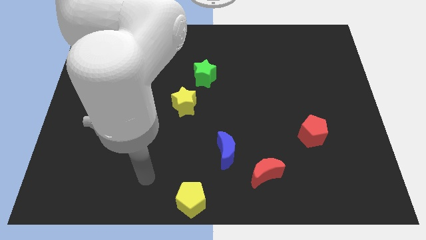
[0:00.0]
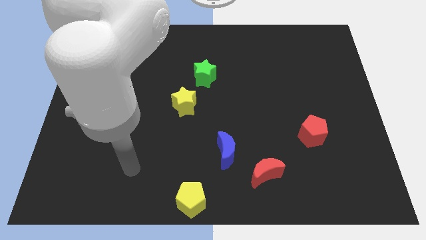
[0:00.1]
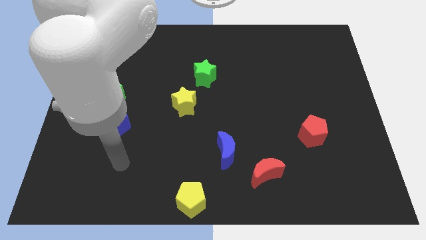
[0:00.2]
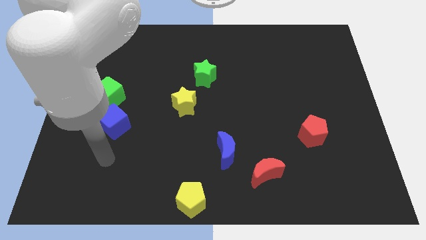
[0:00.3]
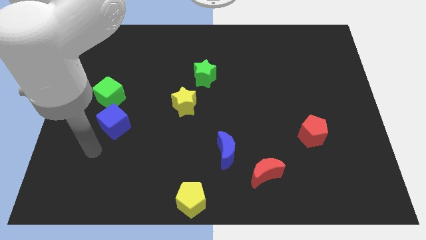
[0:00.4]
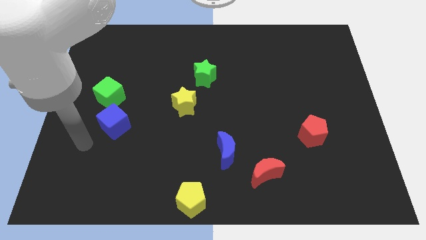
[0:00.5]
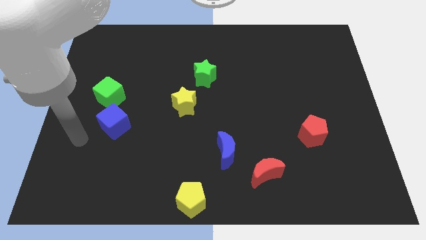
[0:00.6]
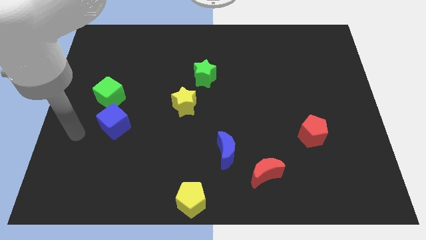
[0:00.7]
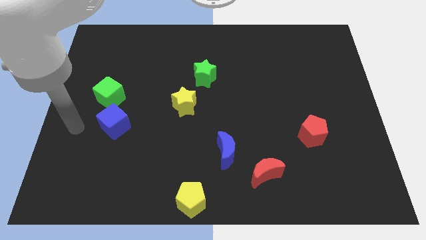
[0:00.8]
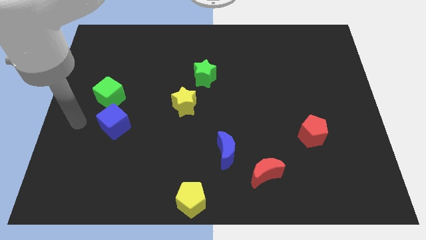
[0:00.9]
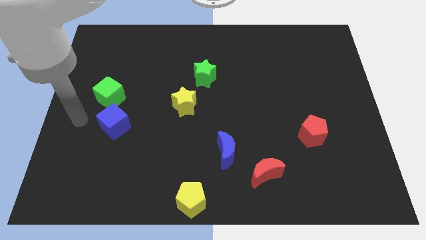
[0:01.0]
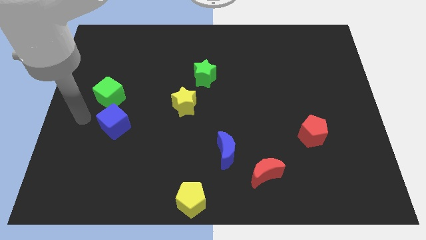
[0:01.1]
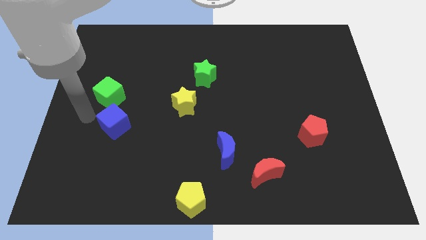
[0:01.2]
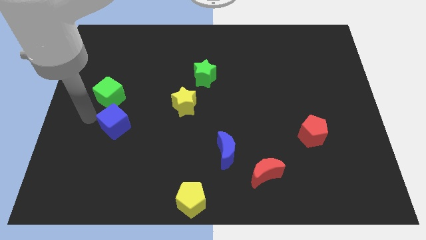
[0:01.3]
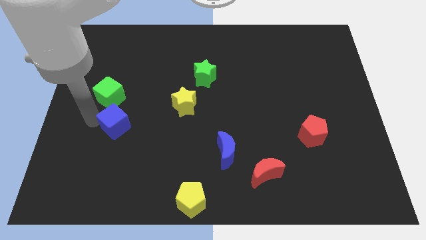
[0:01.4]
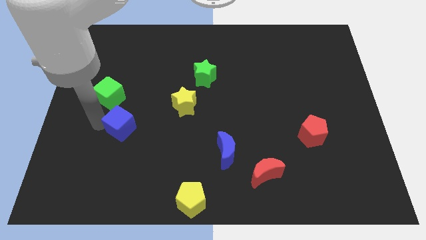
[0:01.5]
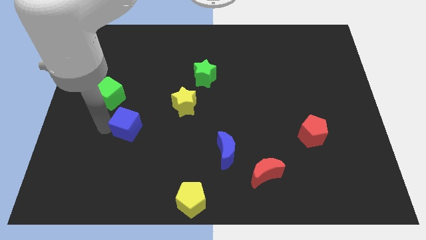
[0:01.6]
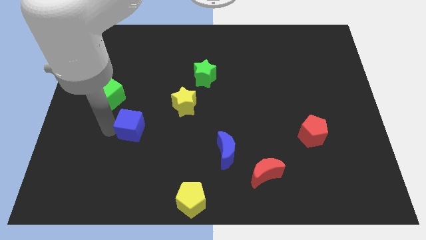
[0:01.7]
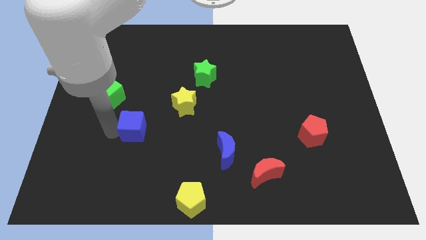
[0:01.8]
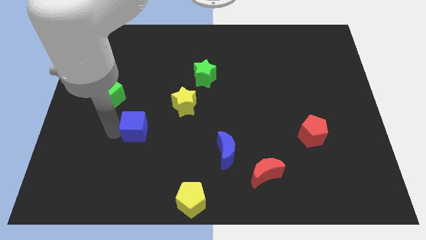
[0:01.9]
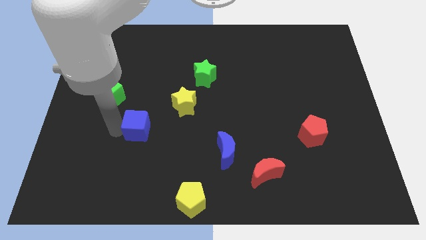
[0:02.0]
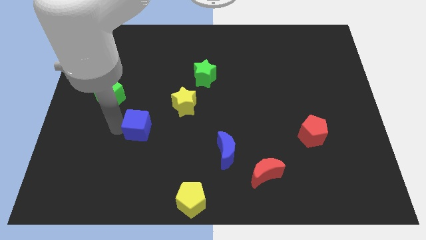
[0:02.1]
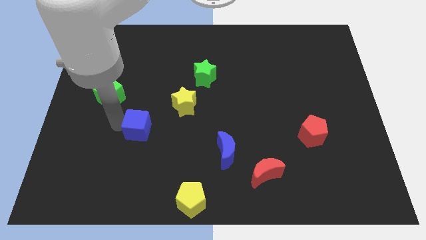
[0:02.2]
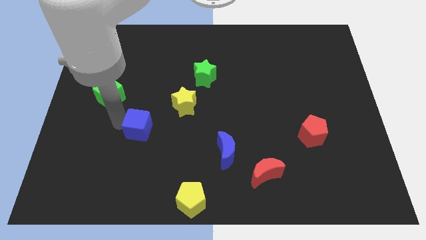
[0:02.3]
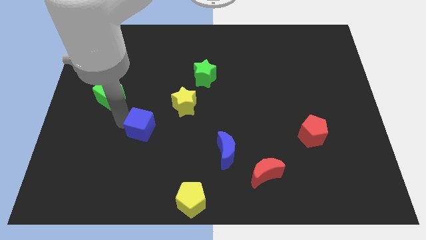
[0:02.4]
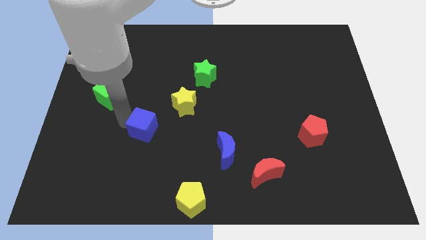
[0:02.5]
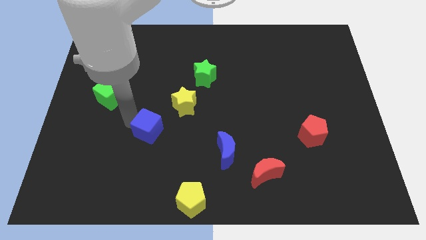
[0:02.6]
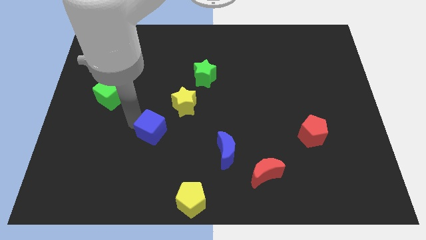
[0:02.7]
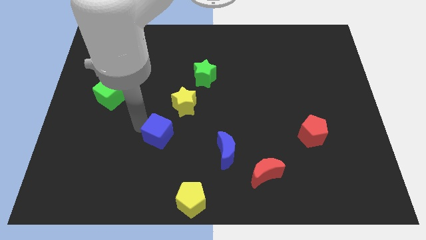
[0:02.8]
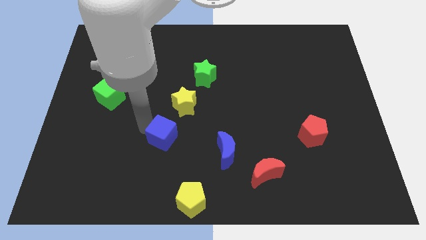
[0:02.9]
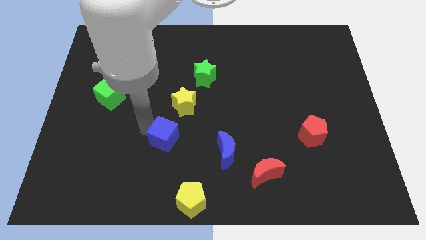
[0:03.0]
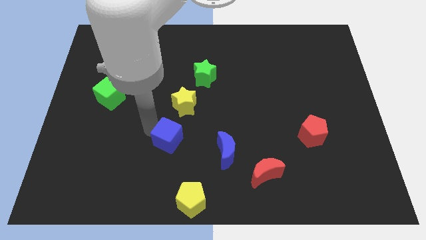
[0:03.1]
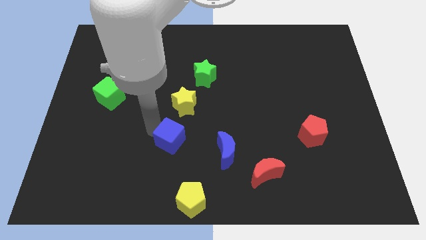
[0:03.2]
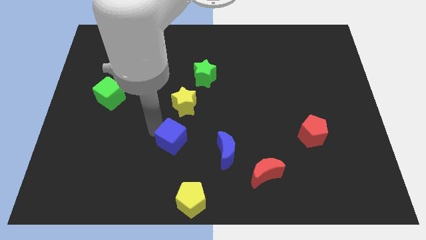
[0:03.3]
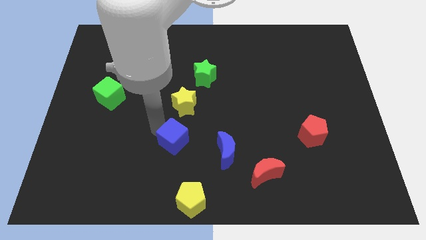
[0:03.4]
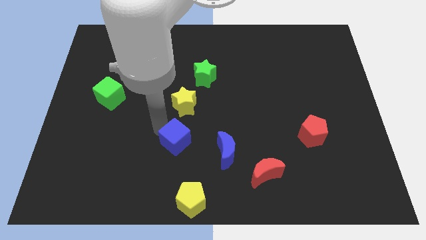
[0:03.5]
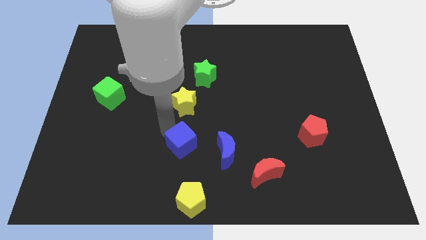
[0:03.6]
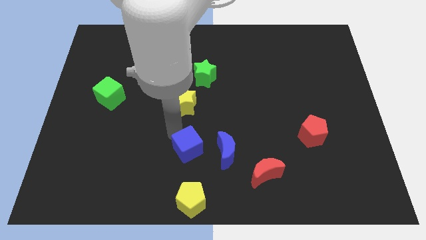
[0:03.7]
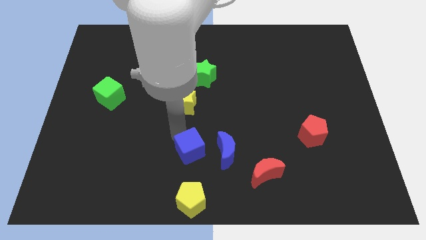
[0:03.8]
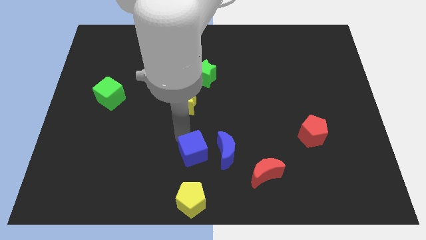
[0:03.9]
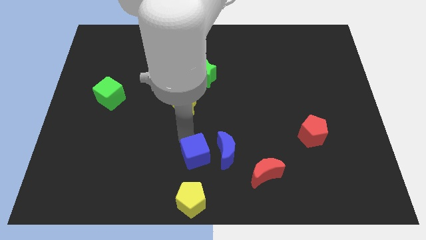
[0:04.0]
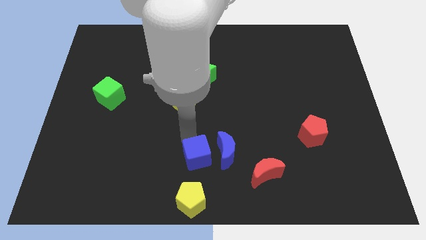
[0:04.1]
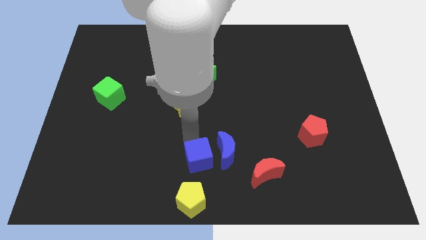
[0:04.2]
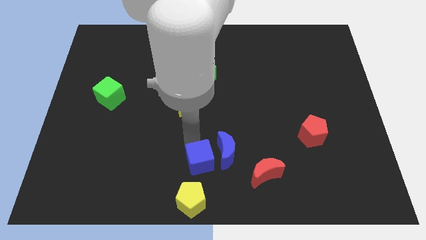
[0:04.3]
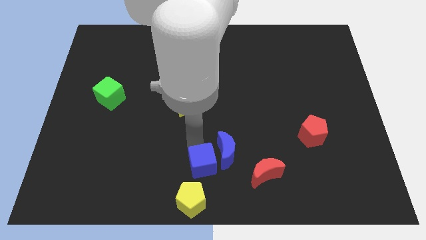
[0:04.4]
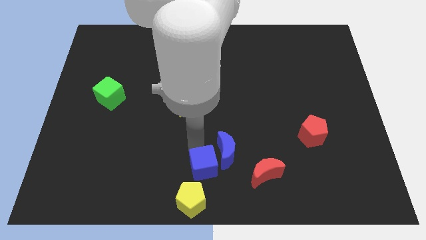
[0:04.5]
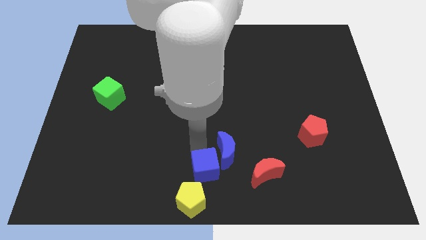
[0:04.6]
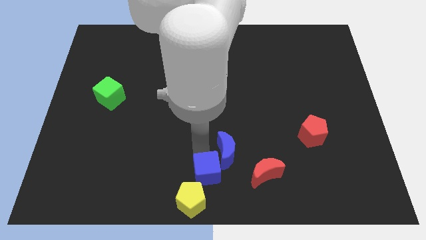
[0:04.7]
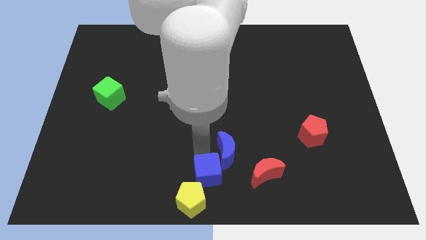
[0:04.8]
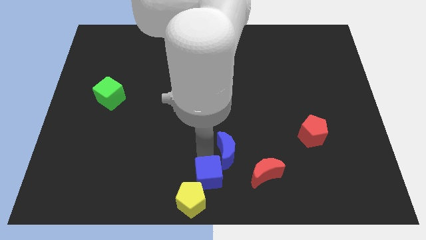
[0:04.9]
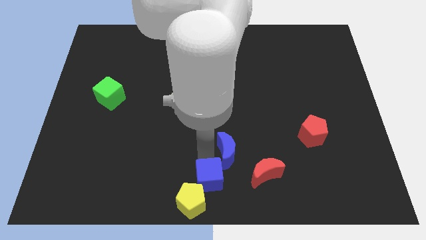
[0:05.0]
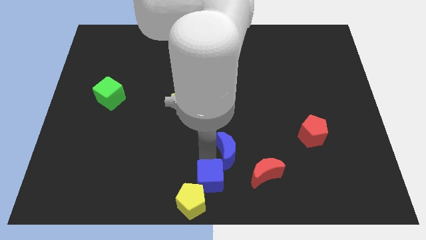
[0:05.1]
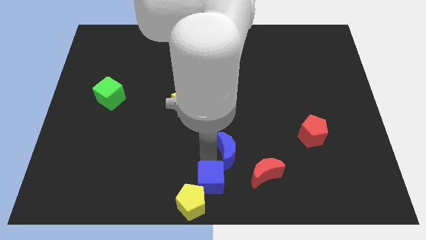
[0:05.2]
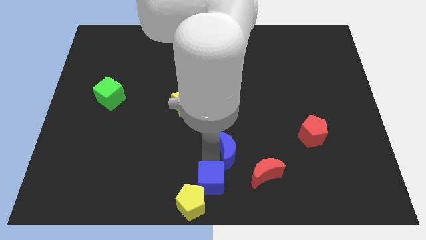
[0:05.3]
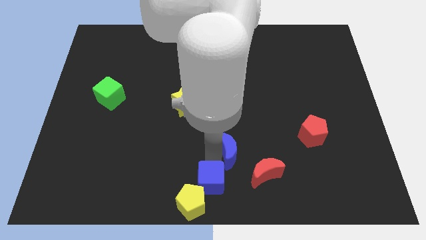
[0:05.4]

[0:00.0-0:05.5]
push the blue cube above the yellow pentagon

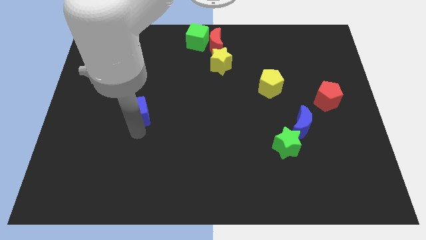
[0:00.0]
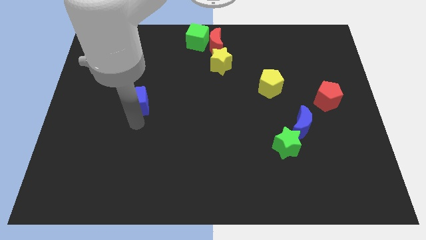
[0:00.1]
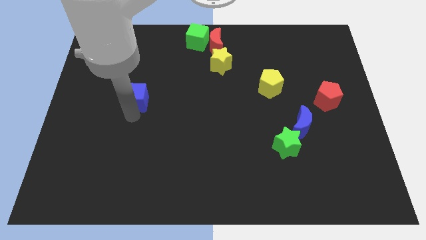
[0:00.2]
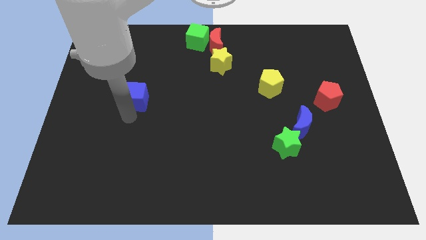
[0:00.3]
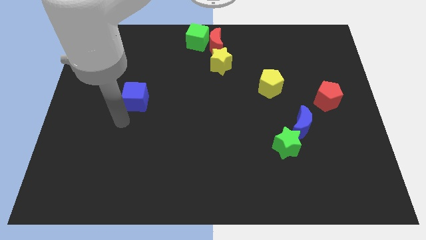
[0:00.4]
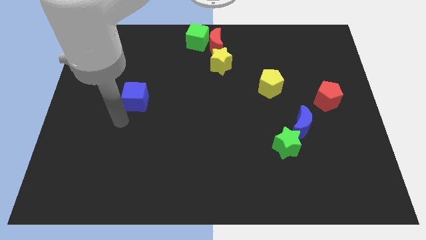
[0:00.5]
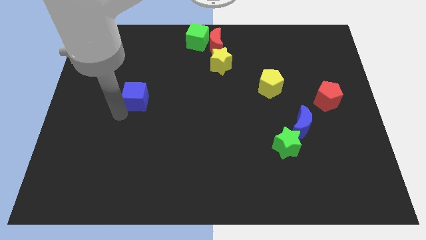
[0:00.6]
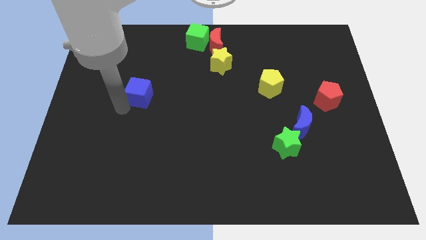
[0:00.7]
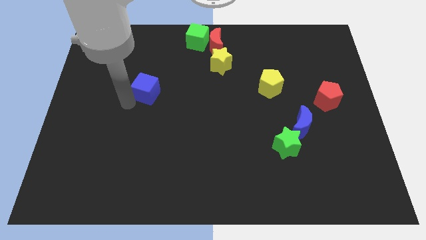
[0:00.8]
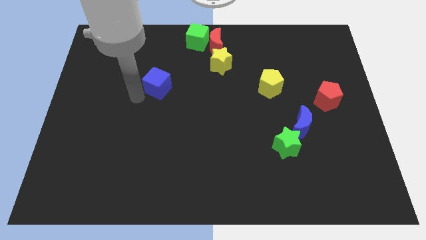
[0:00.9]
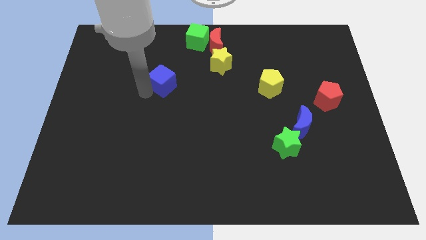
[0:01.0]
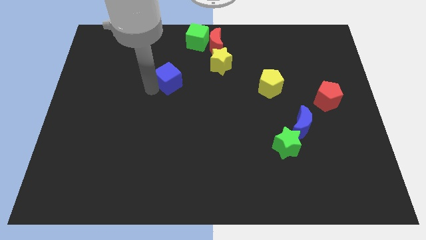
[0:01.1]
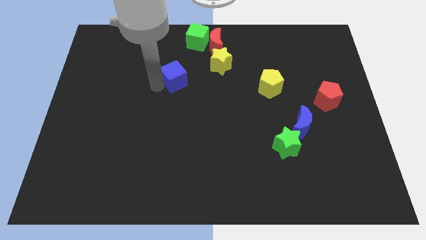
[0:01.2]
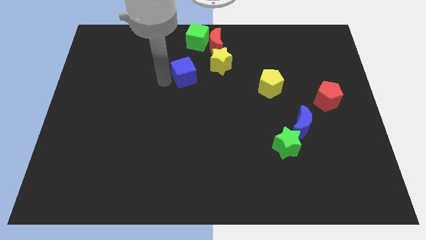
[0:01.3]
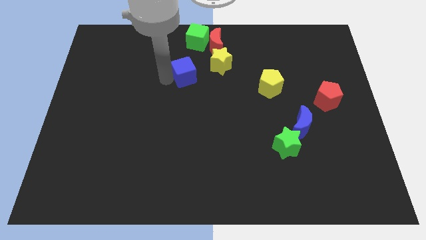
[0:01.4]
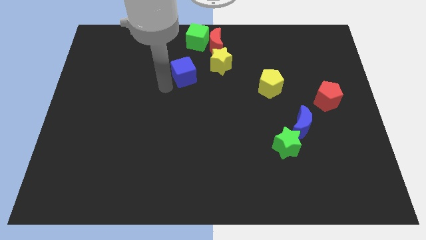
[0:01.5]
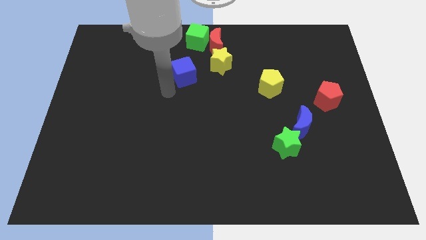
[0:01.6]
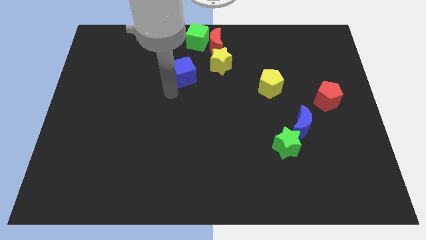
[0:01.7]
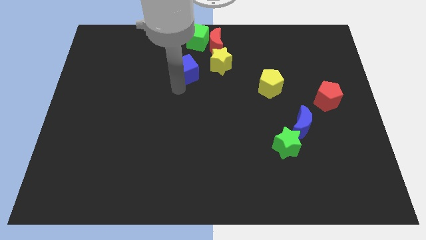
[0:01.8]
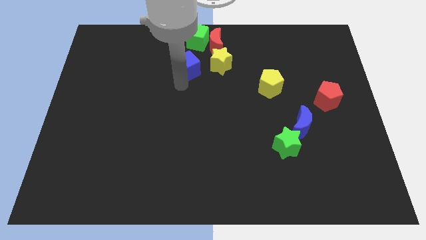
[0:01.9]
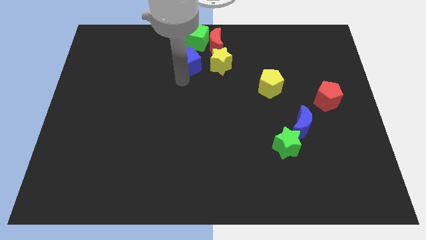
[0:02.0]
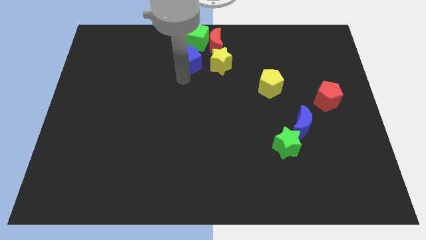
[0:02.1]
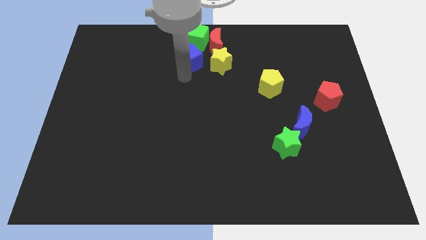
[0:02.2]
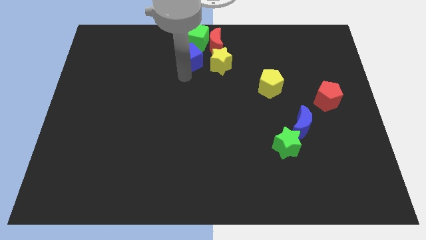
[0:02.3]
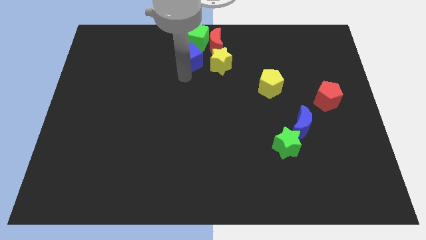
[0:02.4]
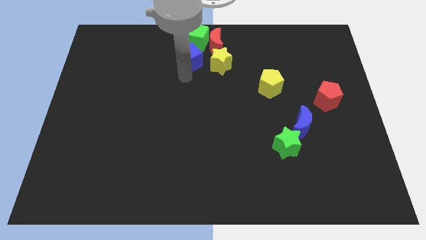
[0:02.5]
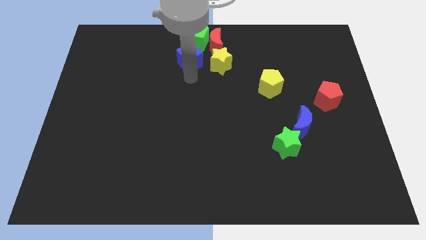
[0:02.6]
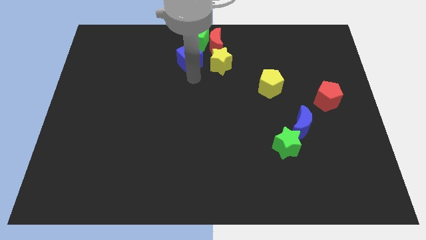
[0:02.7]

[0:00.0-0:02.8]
put the blue cube to the left side of yellow star

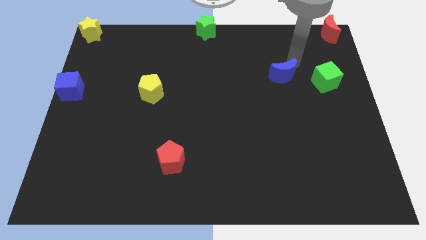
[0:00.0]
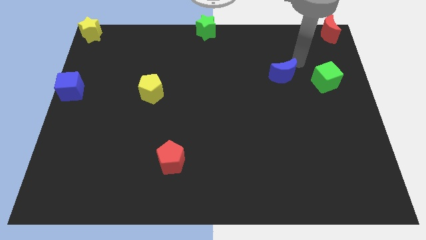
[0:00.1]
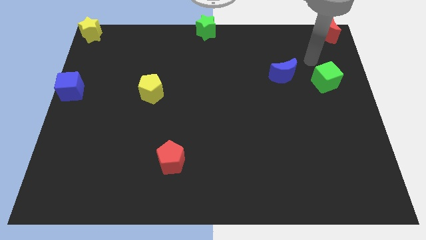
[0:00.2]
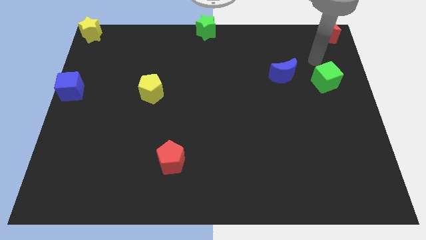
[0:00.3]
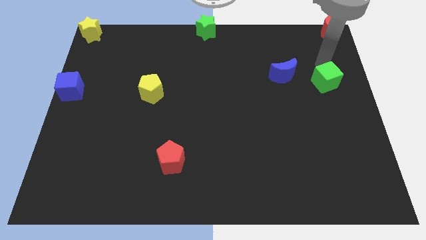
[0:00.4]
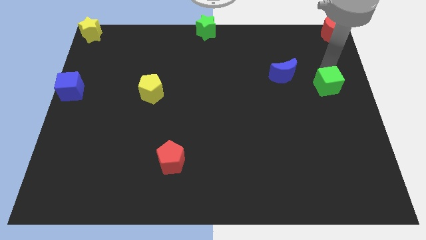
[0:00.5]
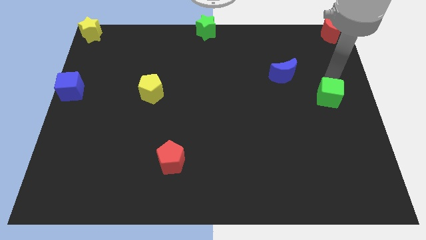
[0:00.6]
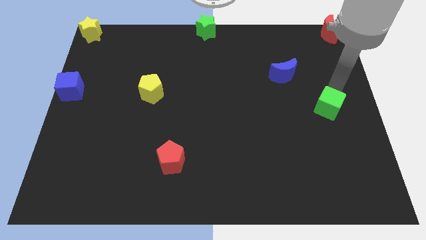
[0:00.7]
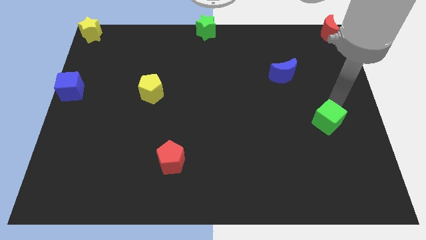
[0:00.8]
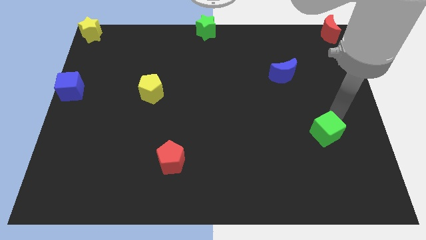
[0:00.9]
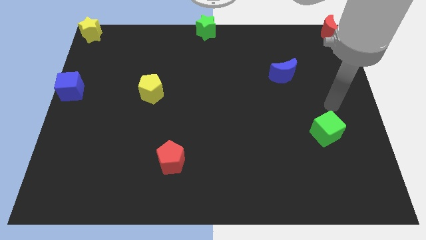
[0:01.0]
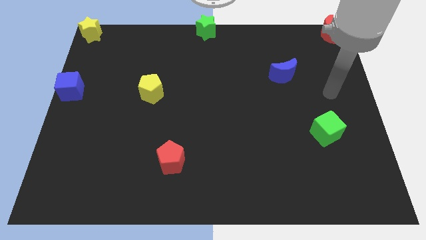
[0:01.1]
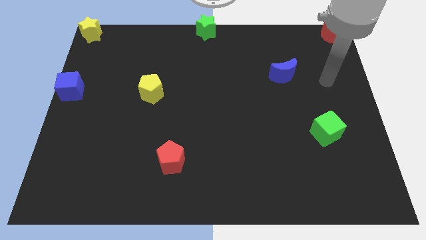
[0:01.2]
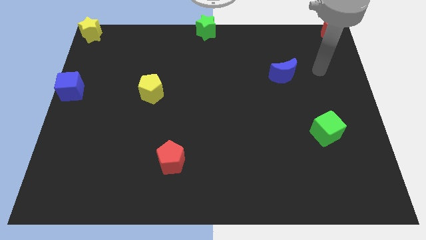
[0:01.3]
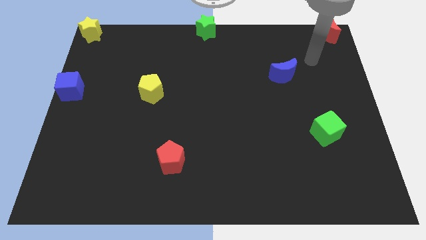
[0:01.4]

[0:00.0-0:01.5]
push the green cube towards the bottom side
